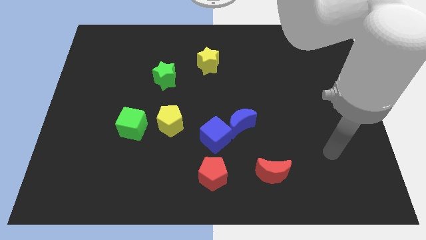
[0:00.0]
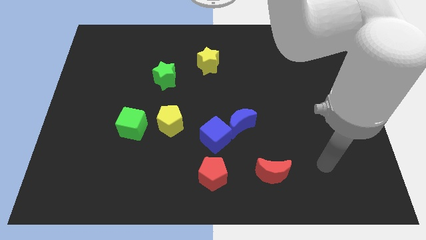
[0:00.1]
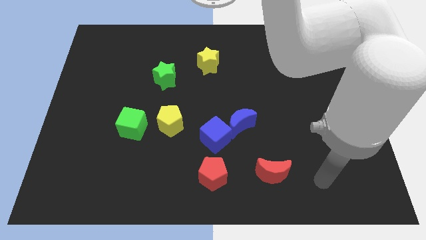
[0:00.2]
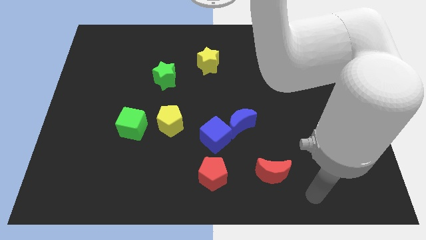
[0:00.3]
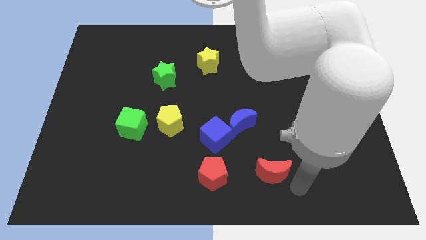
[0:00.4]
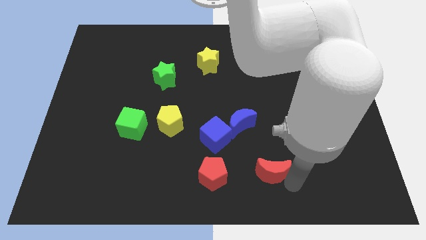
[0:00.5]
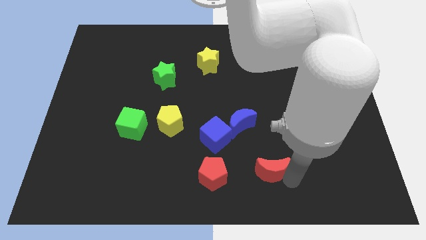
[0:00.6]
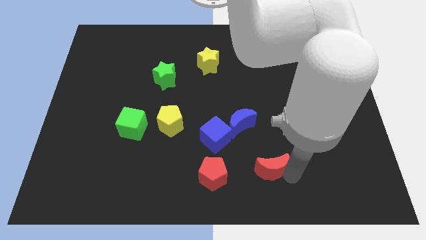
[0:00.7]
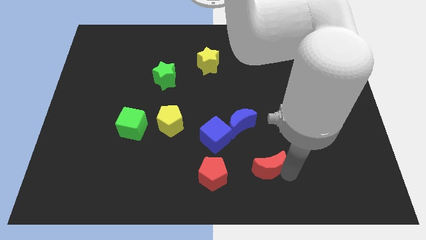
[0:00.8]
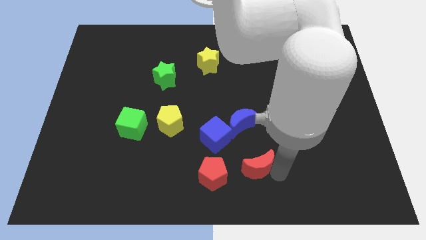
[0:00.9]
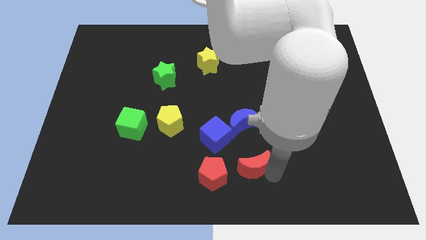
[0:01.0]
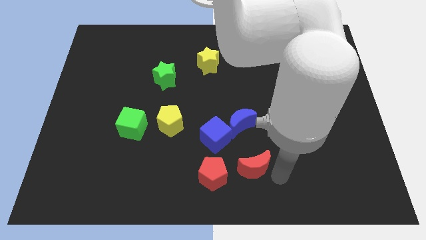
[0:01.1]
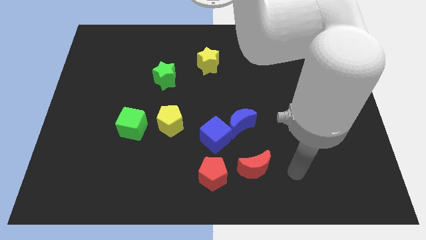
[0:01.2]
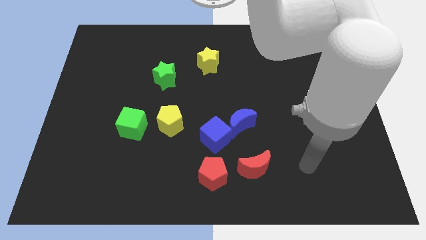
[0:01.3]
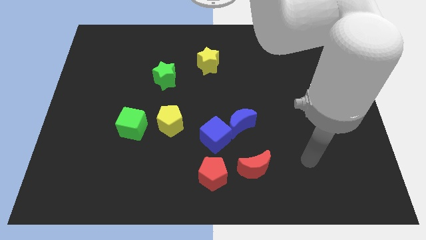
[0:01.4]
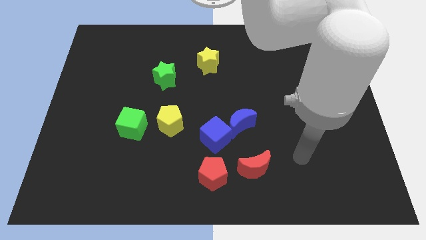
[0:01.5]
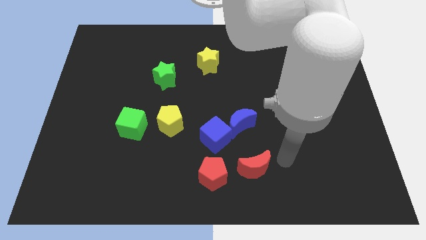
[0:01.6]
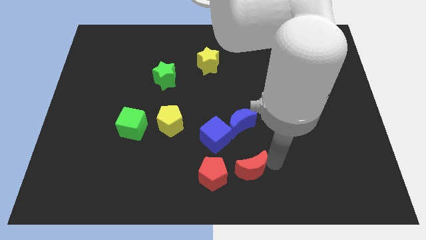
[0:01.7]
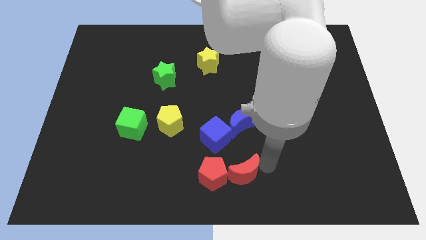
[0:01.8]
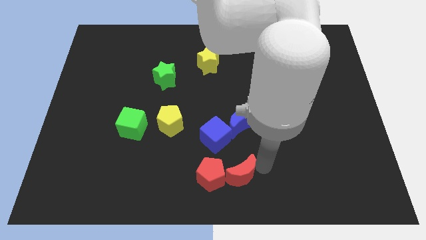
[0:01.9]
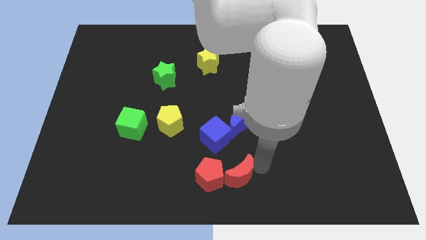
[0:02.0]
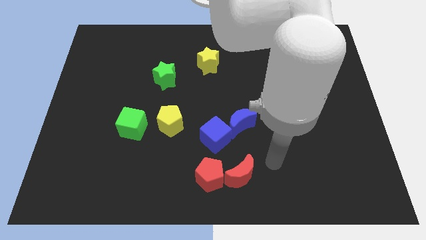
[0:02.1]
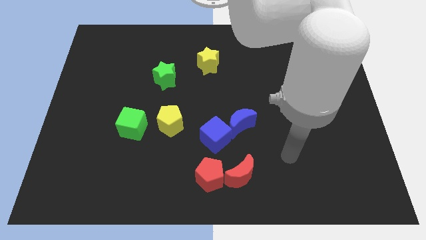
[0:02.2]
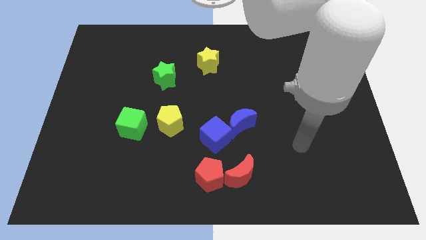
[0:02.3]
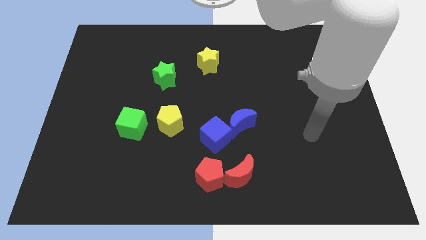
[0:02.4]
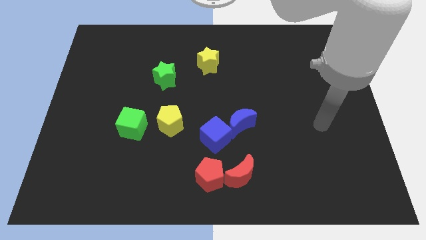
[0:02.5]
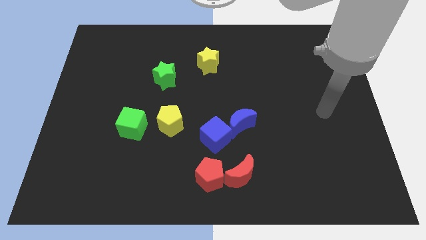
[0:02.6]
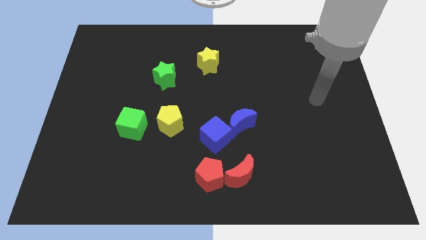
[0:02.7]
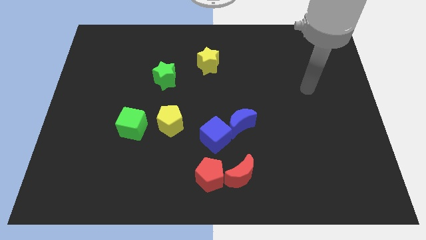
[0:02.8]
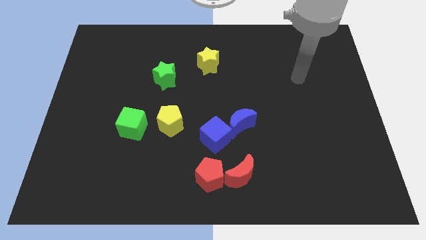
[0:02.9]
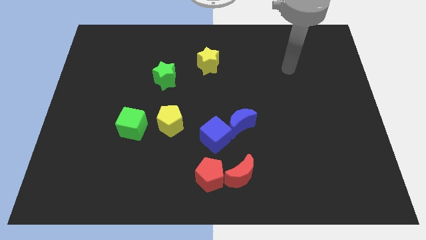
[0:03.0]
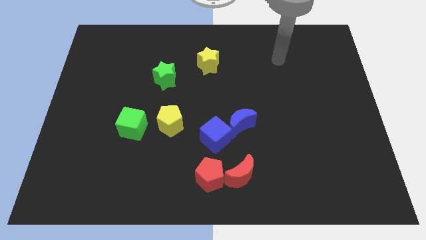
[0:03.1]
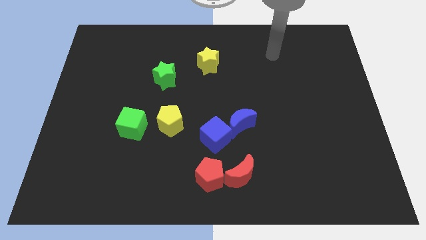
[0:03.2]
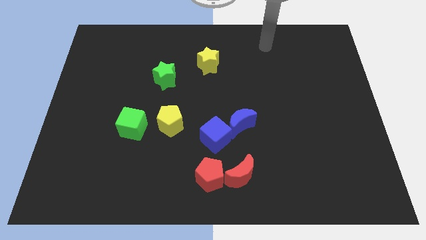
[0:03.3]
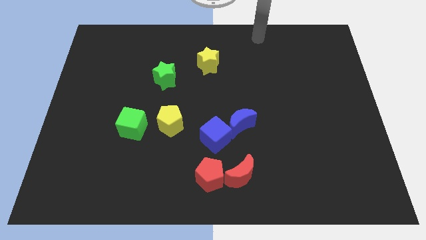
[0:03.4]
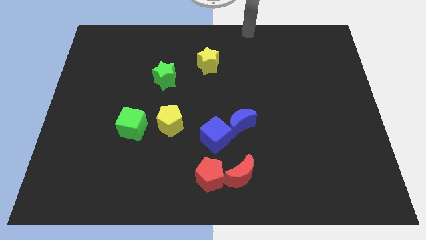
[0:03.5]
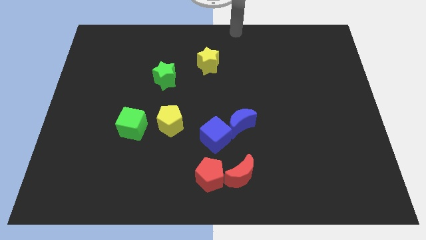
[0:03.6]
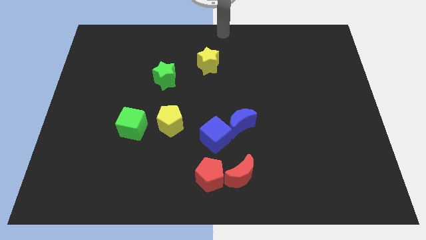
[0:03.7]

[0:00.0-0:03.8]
attach the red moon to the red pentagon

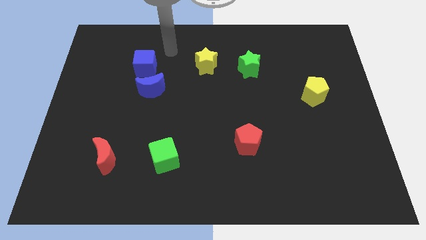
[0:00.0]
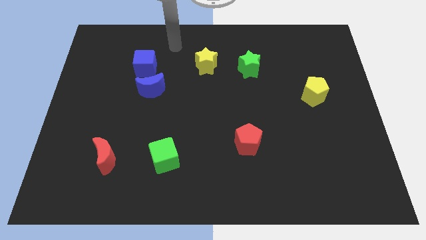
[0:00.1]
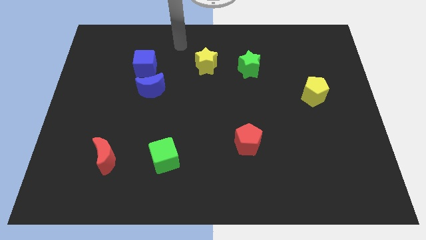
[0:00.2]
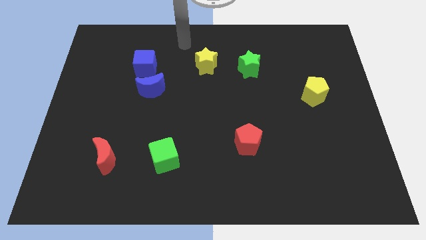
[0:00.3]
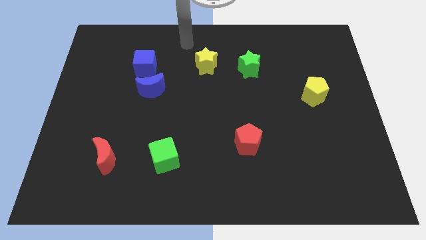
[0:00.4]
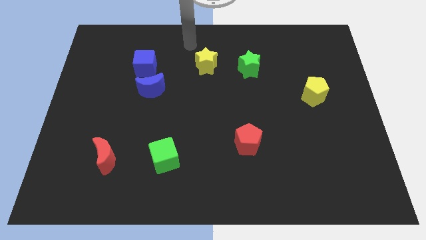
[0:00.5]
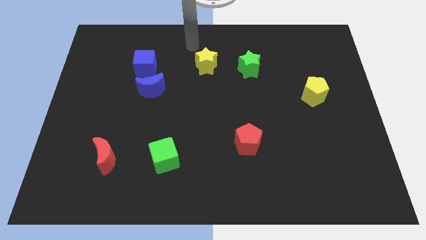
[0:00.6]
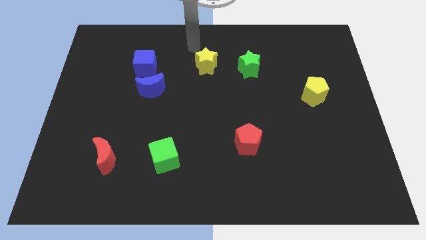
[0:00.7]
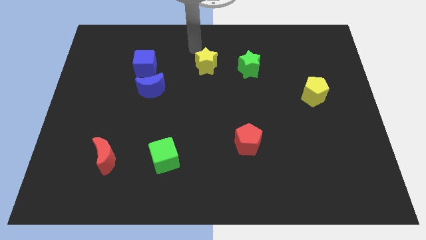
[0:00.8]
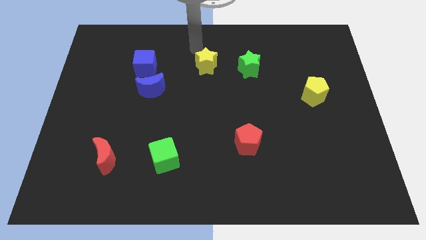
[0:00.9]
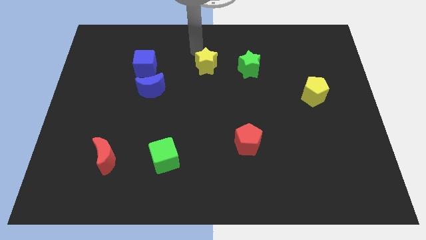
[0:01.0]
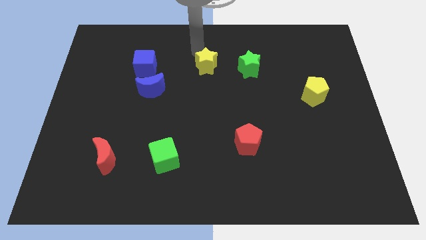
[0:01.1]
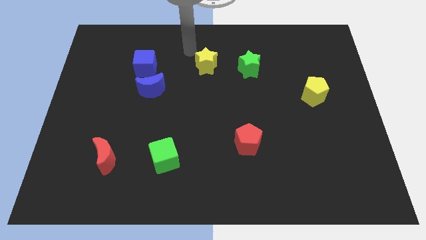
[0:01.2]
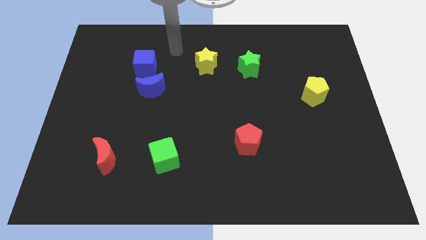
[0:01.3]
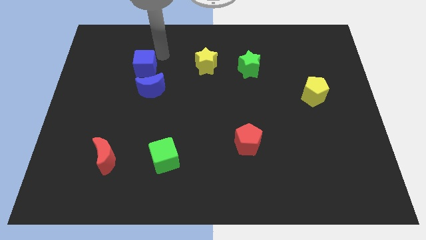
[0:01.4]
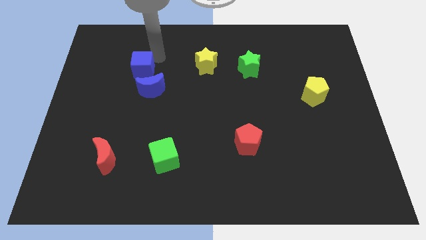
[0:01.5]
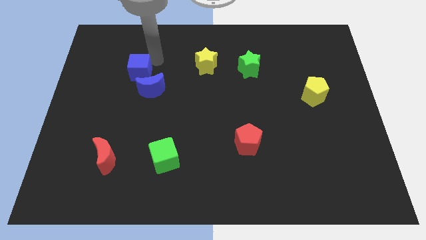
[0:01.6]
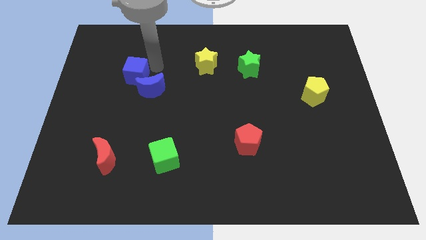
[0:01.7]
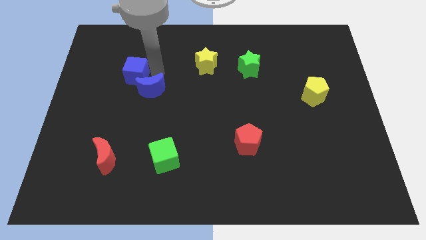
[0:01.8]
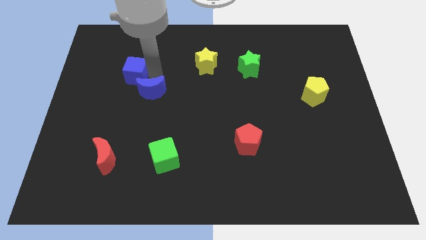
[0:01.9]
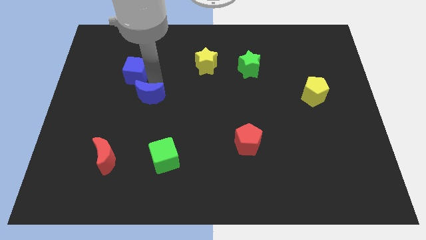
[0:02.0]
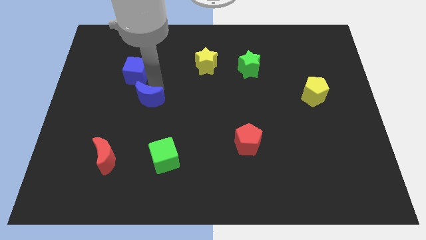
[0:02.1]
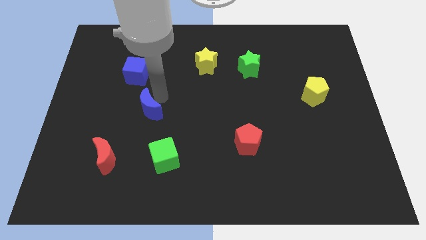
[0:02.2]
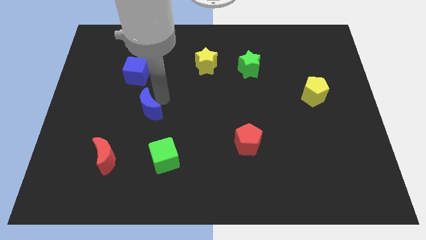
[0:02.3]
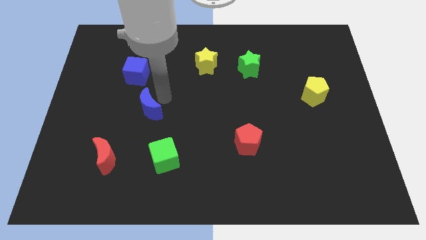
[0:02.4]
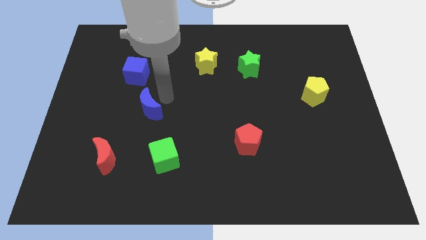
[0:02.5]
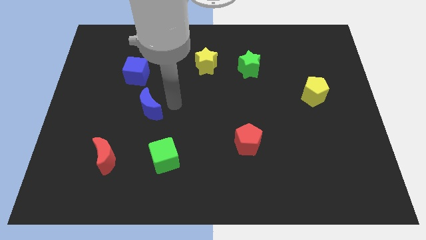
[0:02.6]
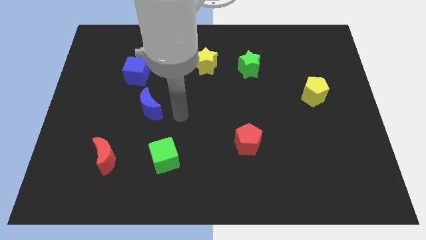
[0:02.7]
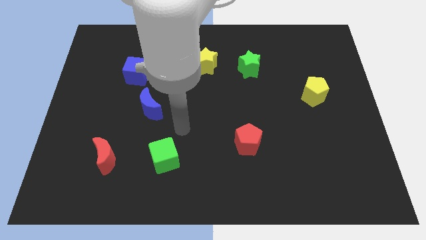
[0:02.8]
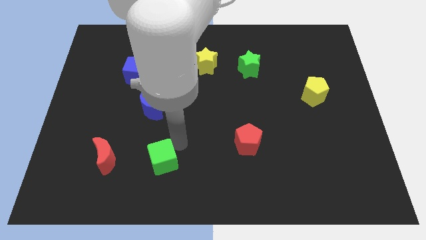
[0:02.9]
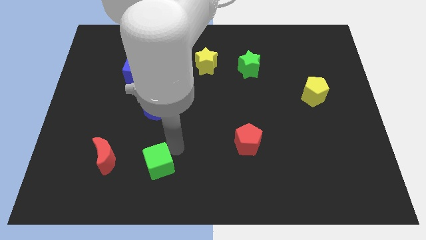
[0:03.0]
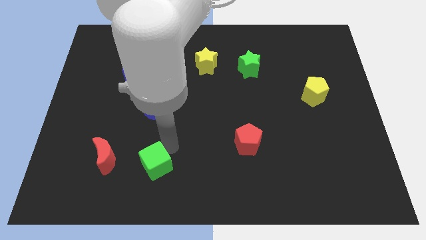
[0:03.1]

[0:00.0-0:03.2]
place the blue crescent in between the blue cube and the green cube

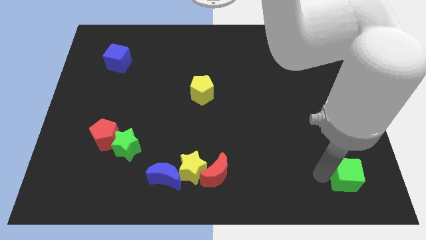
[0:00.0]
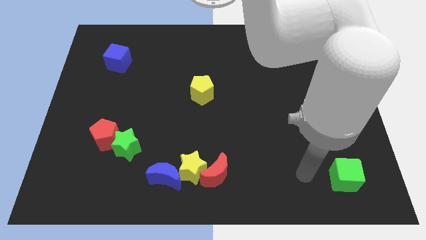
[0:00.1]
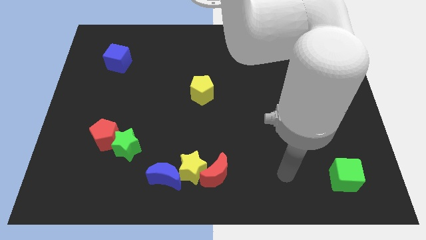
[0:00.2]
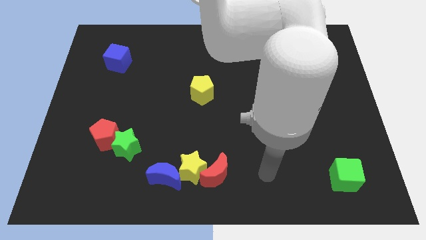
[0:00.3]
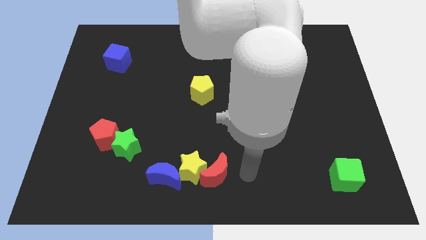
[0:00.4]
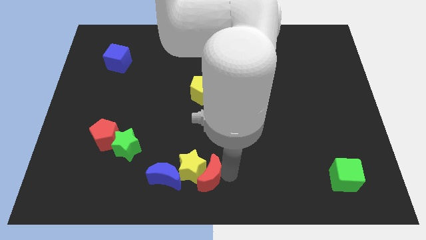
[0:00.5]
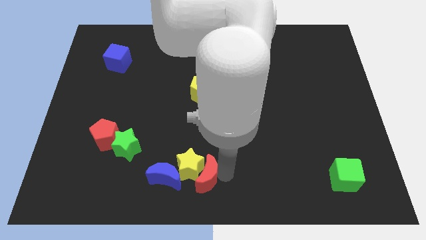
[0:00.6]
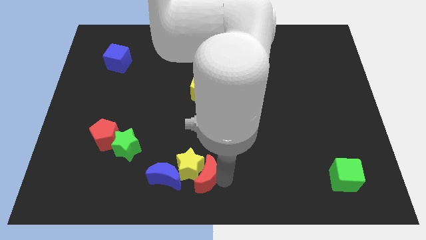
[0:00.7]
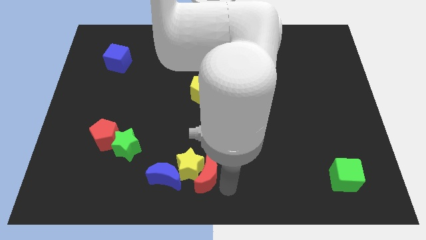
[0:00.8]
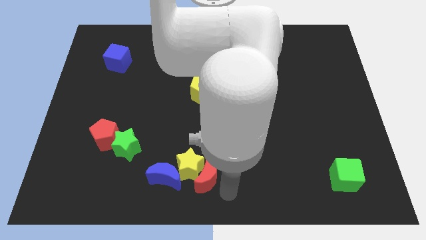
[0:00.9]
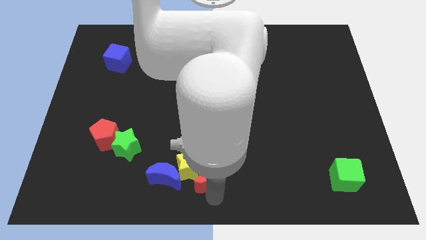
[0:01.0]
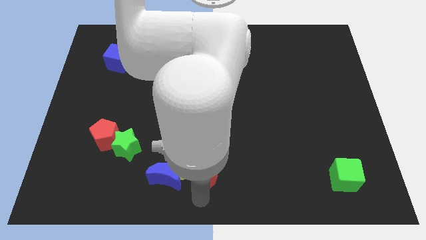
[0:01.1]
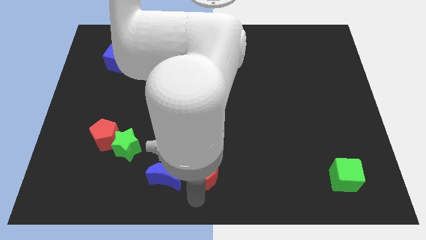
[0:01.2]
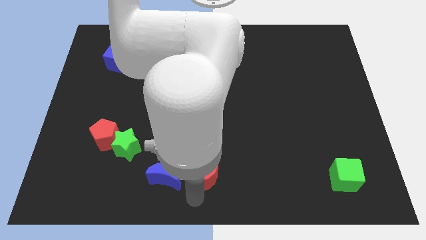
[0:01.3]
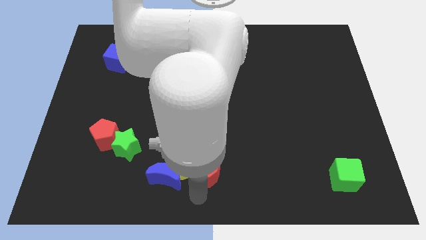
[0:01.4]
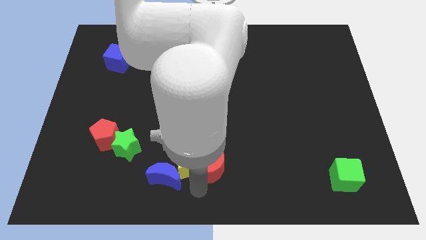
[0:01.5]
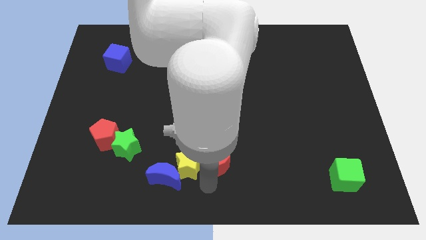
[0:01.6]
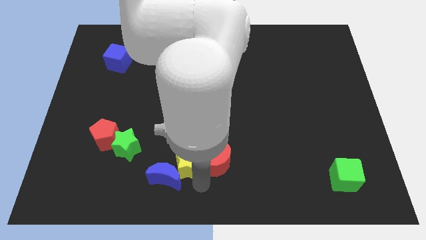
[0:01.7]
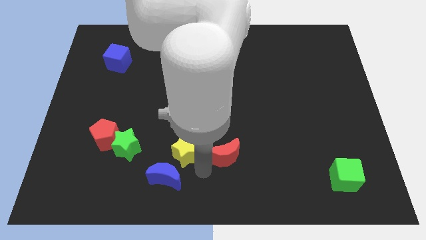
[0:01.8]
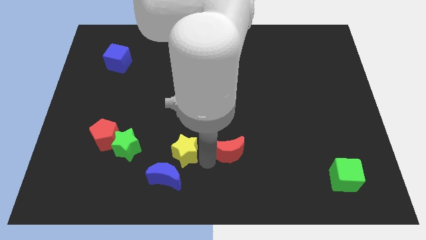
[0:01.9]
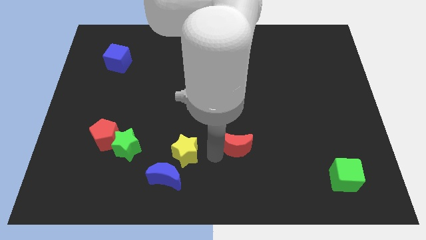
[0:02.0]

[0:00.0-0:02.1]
slightly push the red crescent towards the top of the board
